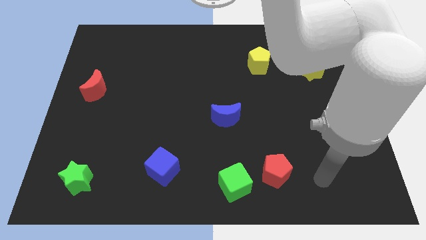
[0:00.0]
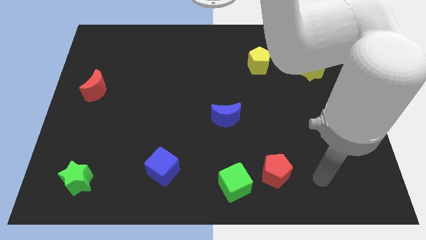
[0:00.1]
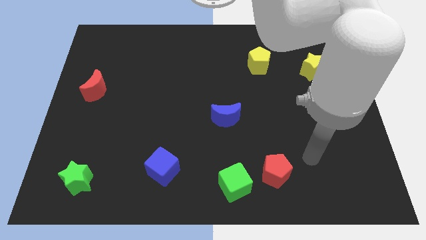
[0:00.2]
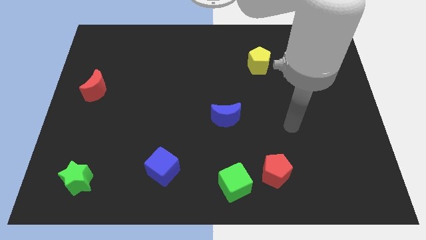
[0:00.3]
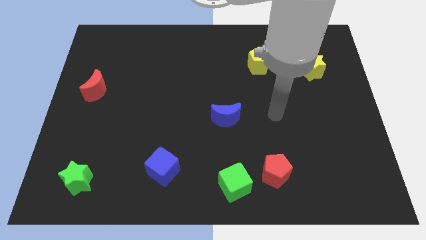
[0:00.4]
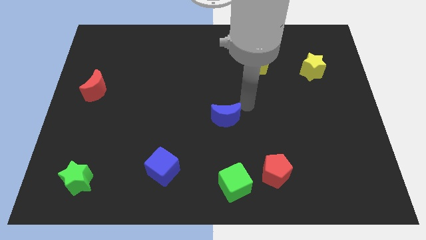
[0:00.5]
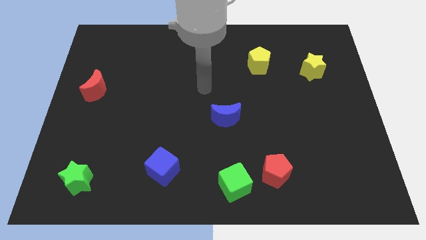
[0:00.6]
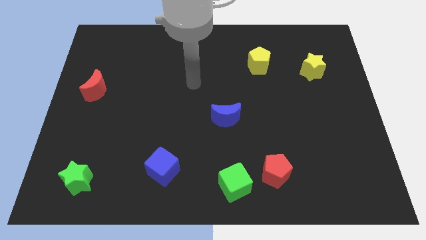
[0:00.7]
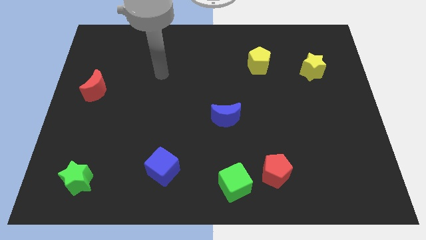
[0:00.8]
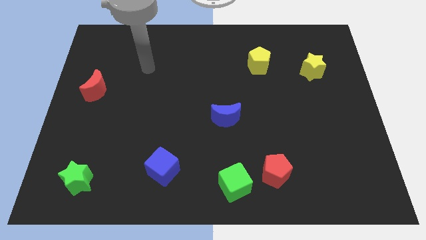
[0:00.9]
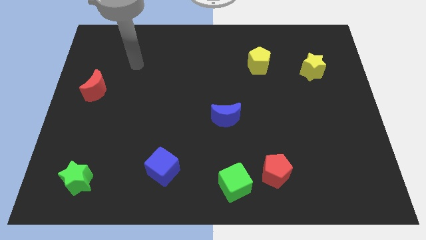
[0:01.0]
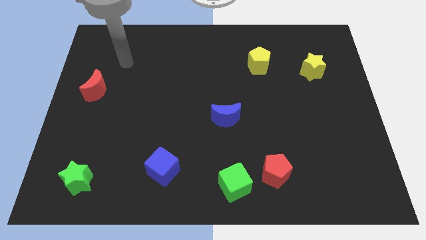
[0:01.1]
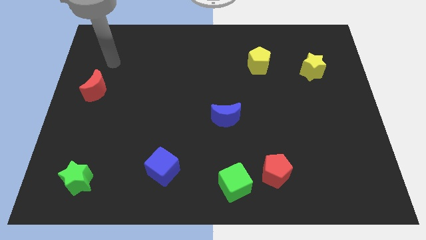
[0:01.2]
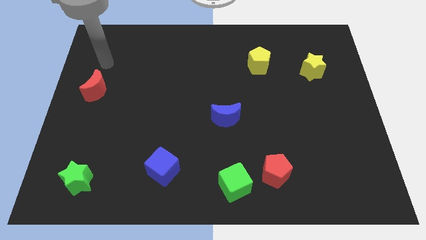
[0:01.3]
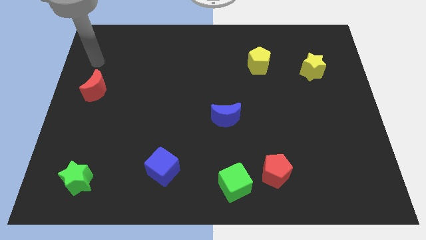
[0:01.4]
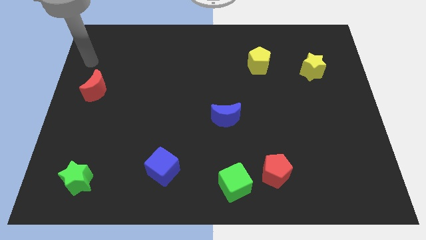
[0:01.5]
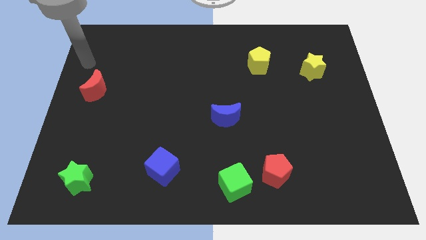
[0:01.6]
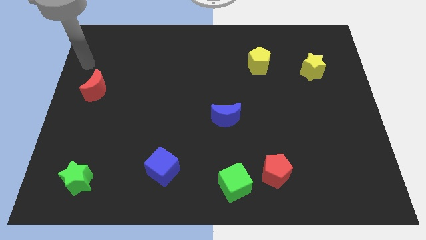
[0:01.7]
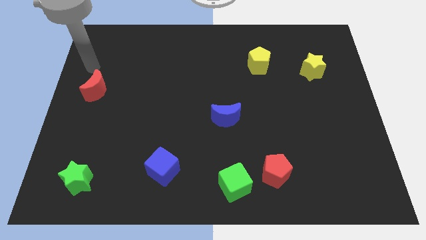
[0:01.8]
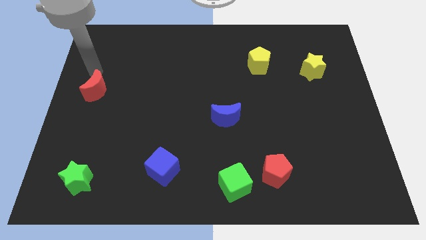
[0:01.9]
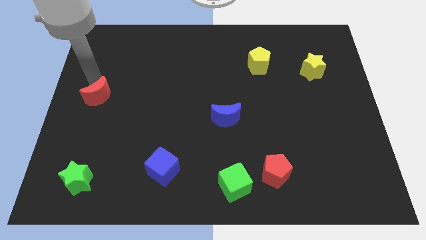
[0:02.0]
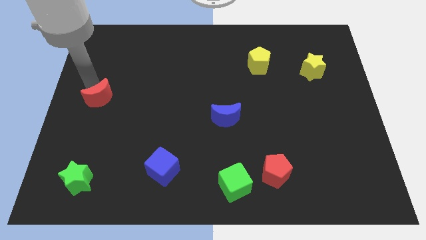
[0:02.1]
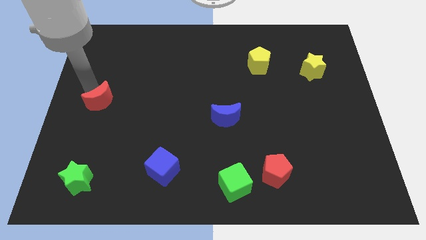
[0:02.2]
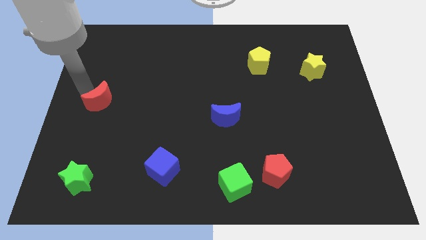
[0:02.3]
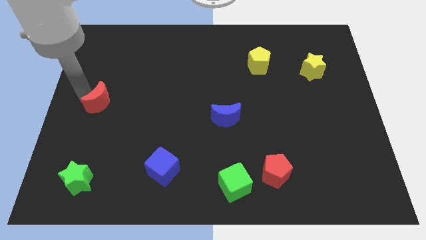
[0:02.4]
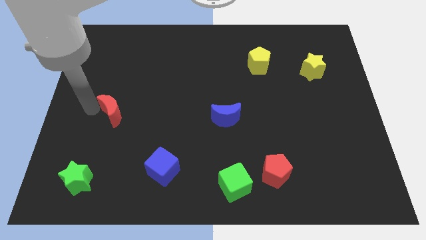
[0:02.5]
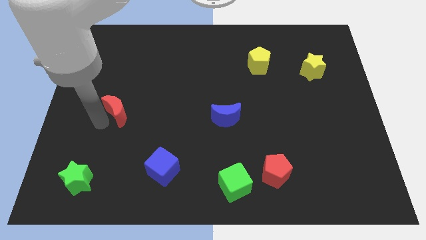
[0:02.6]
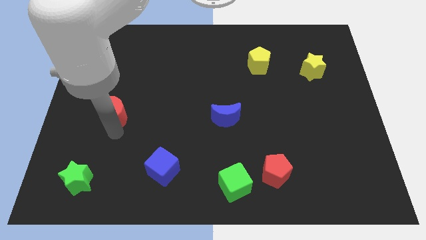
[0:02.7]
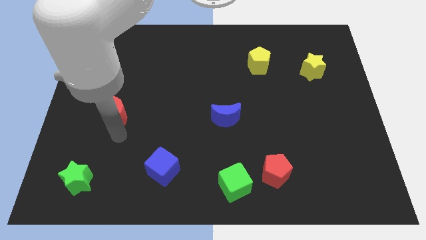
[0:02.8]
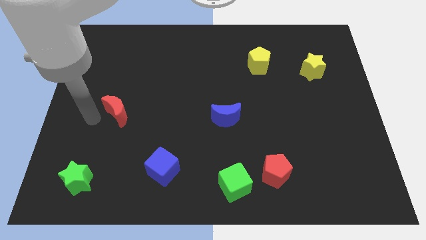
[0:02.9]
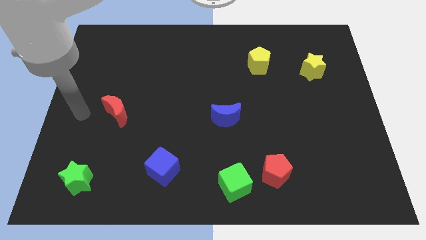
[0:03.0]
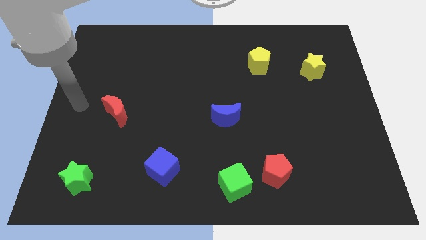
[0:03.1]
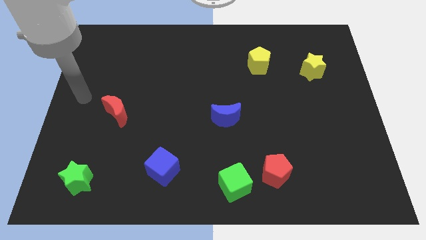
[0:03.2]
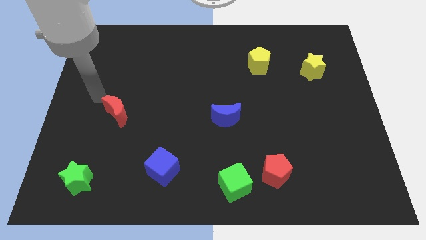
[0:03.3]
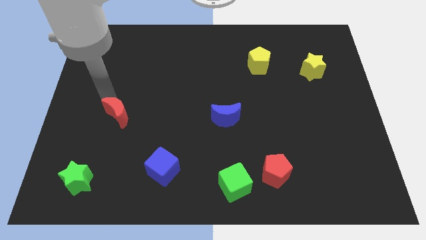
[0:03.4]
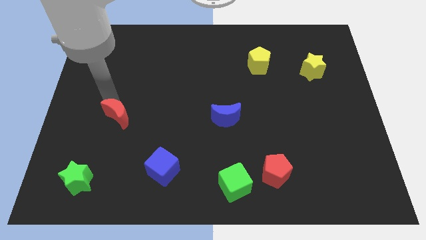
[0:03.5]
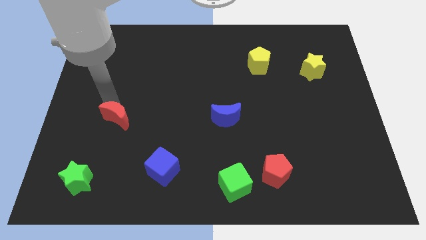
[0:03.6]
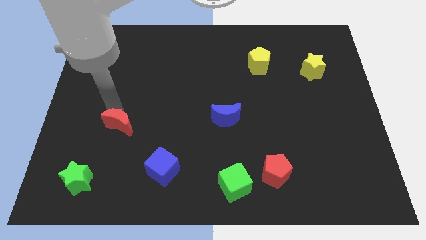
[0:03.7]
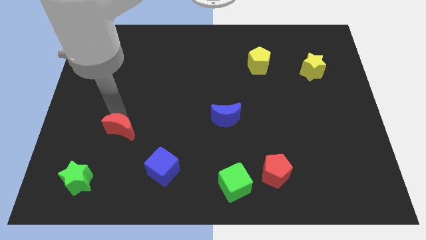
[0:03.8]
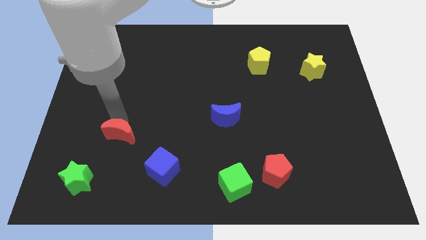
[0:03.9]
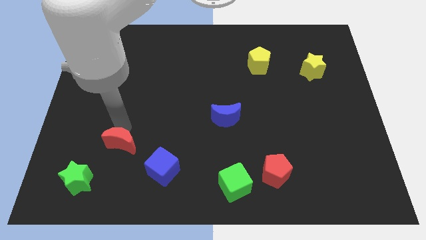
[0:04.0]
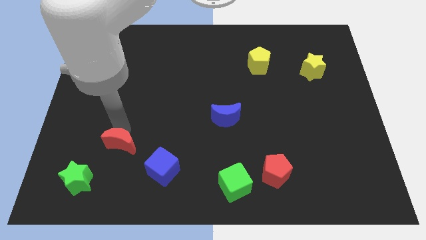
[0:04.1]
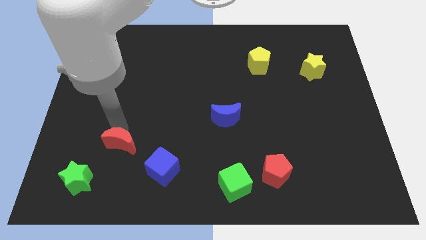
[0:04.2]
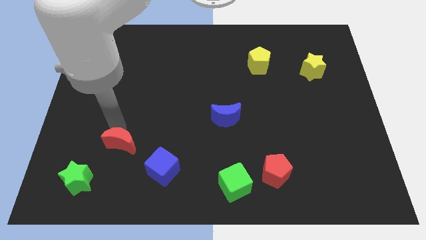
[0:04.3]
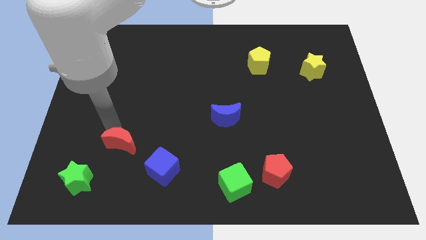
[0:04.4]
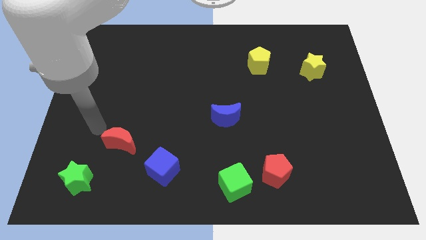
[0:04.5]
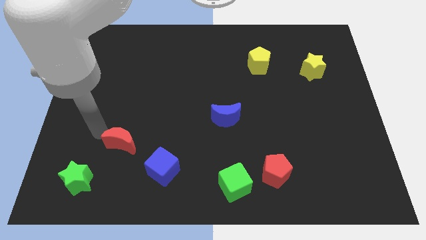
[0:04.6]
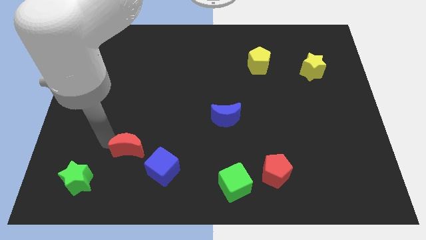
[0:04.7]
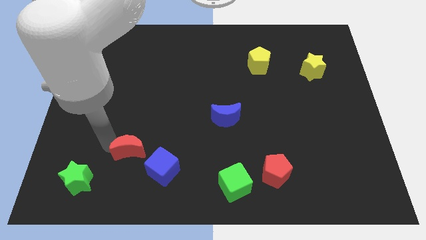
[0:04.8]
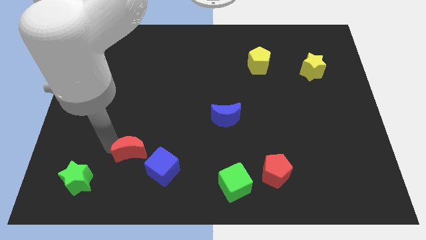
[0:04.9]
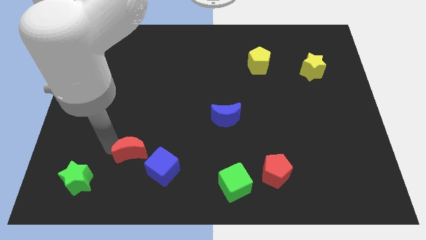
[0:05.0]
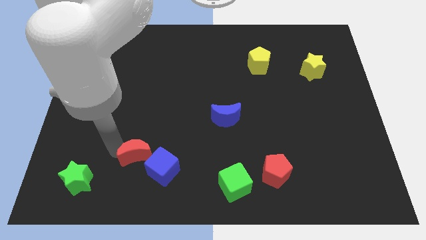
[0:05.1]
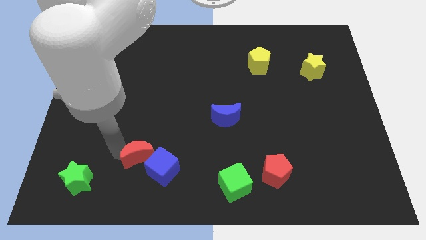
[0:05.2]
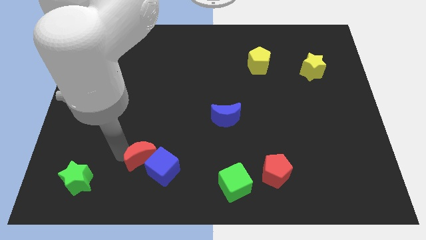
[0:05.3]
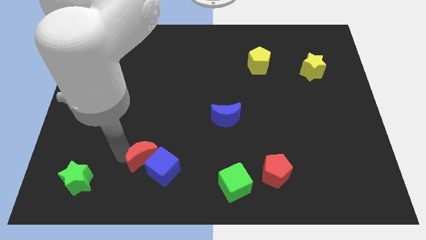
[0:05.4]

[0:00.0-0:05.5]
move the red moon towards the blue cube

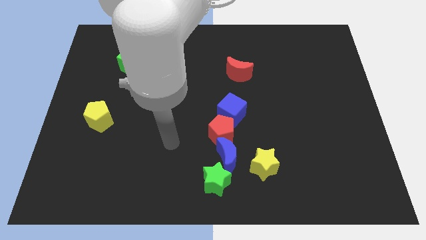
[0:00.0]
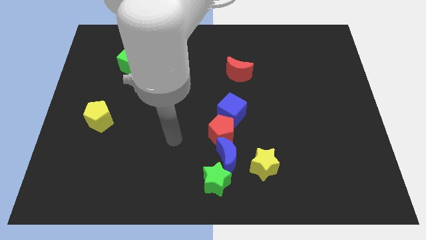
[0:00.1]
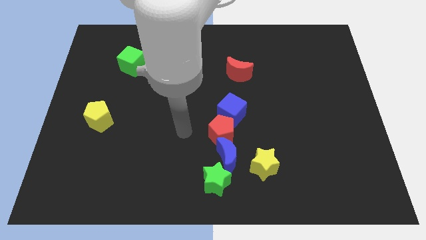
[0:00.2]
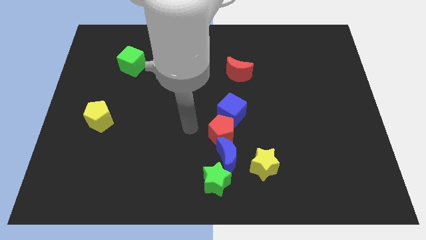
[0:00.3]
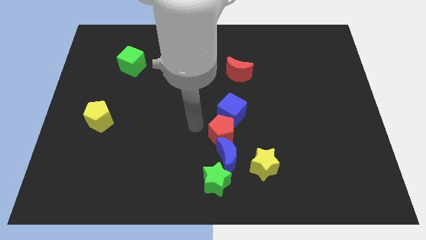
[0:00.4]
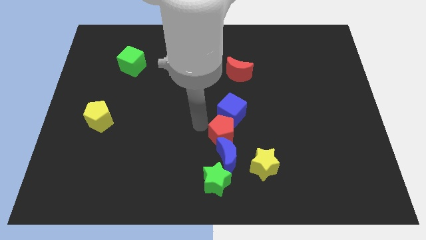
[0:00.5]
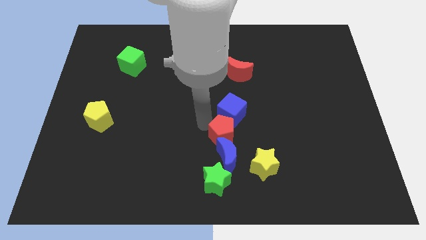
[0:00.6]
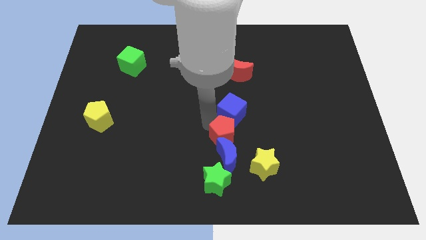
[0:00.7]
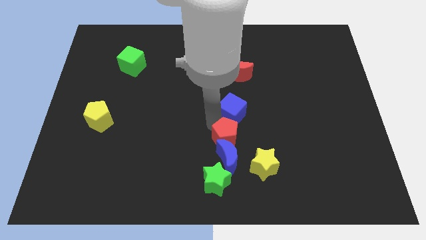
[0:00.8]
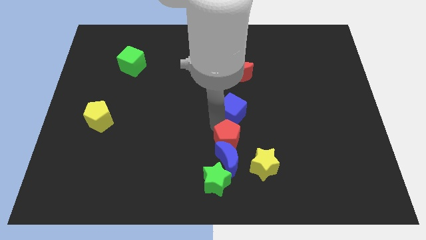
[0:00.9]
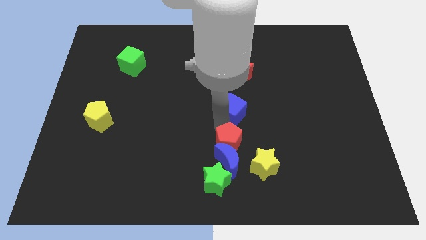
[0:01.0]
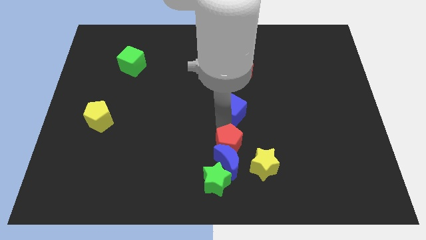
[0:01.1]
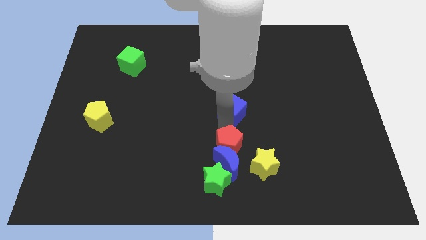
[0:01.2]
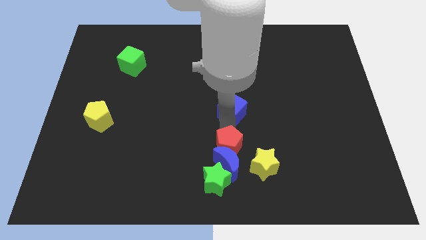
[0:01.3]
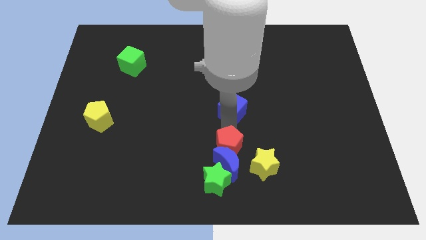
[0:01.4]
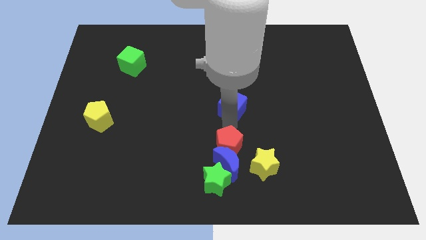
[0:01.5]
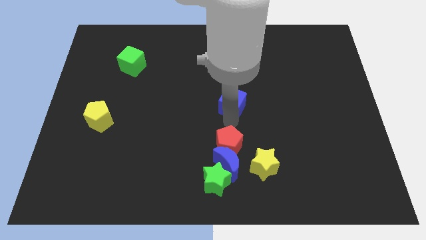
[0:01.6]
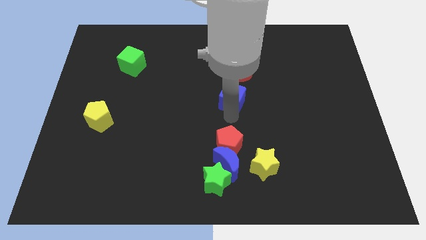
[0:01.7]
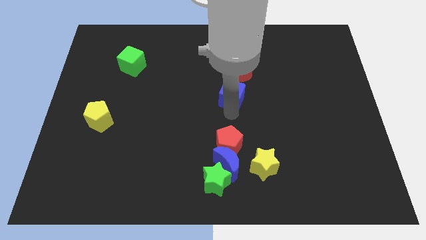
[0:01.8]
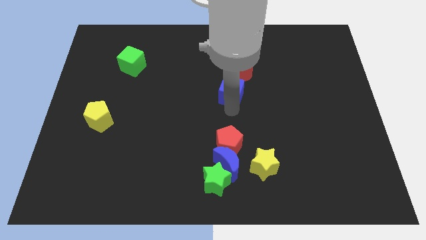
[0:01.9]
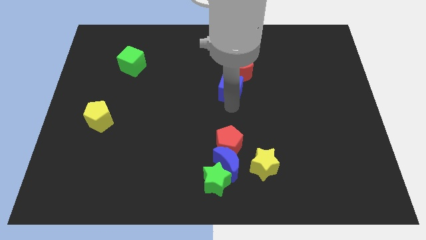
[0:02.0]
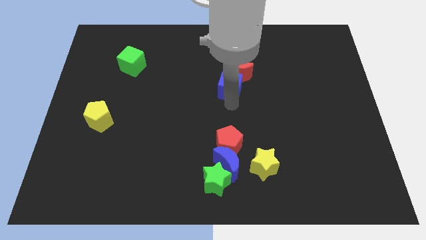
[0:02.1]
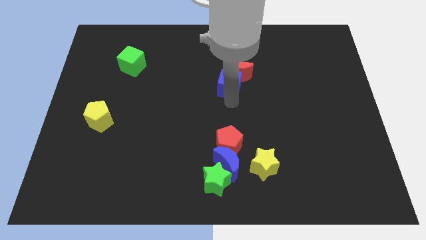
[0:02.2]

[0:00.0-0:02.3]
put the blue cube to the red moon

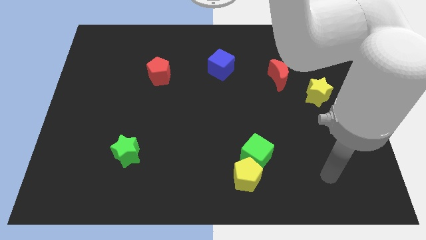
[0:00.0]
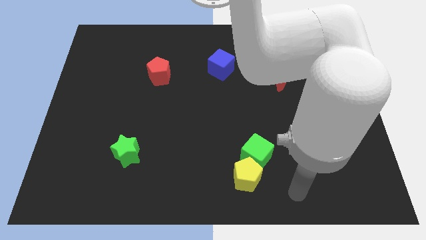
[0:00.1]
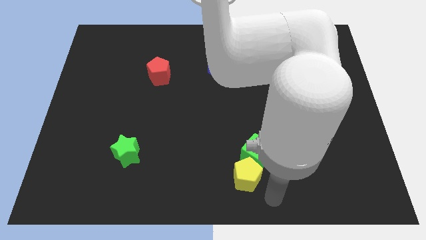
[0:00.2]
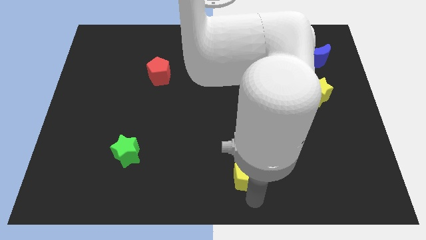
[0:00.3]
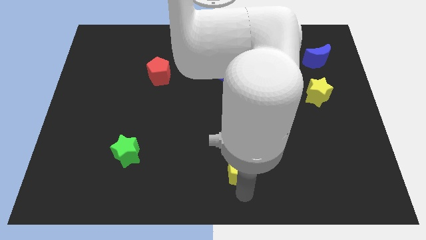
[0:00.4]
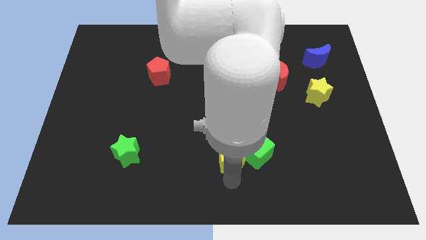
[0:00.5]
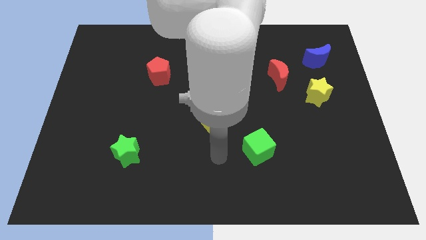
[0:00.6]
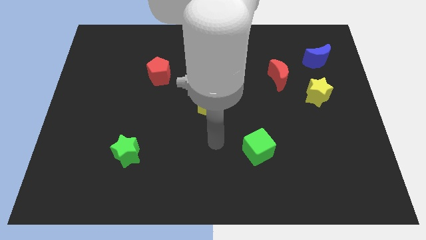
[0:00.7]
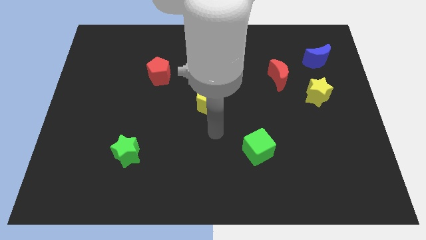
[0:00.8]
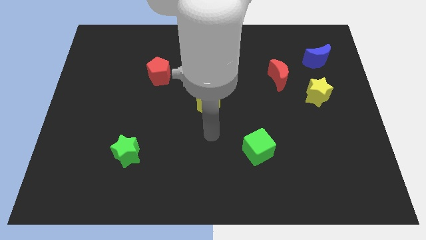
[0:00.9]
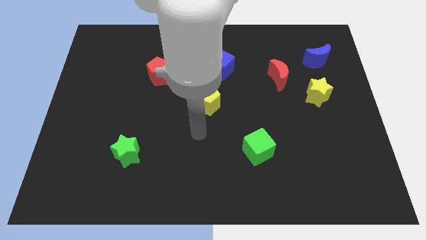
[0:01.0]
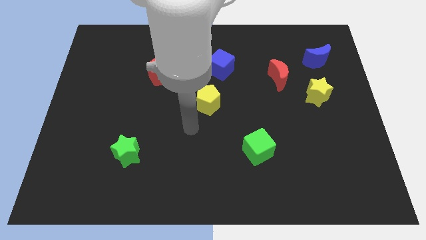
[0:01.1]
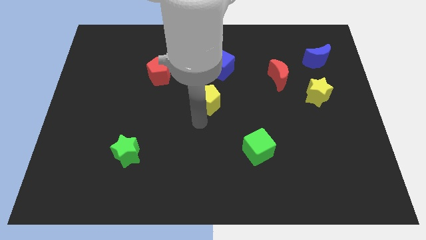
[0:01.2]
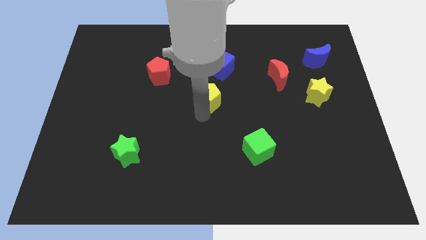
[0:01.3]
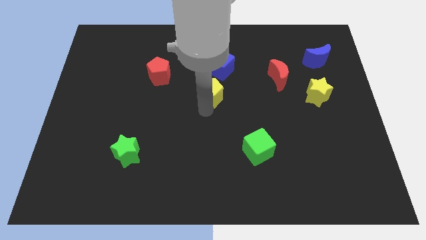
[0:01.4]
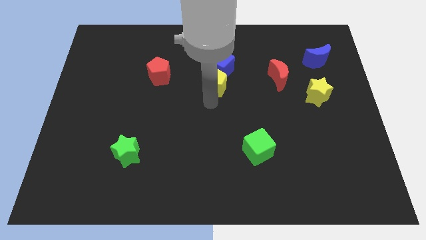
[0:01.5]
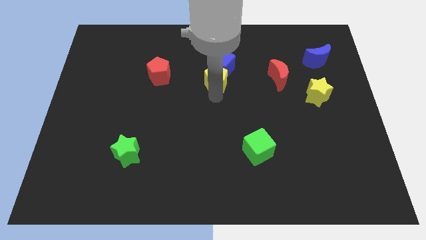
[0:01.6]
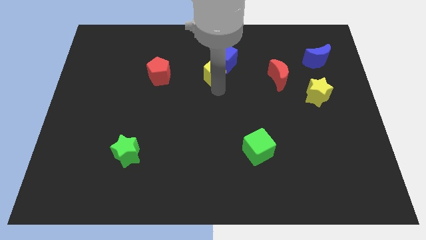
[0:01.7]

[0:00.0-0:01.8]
push the yellow pentagon to the blue cube
